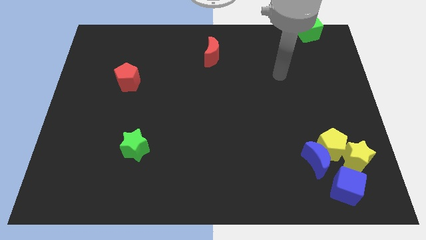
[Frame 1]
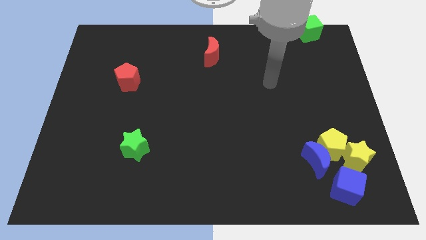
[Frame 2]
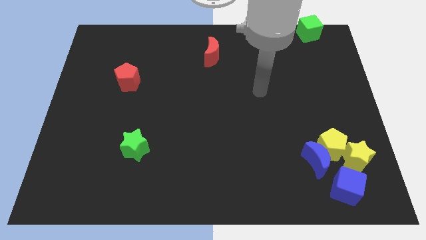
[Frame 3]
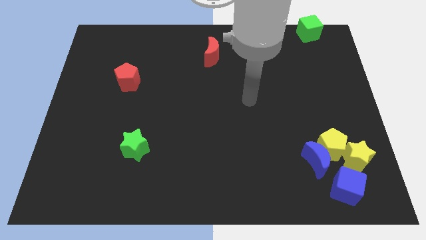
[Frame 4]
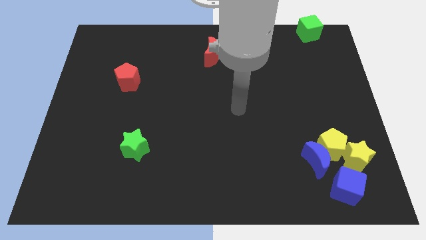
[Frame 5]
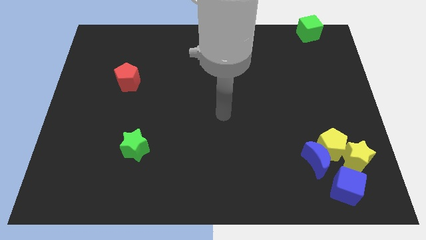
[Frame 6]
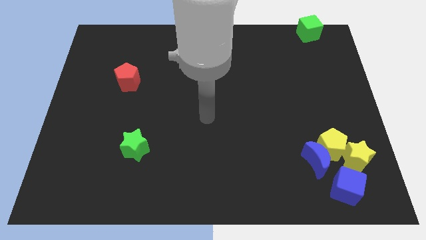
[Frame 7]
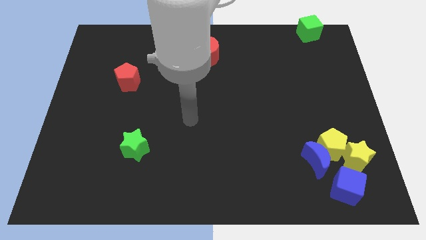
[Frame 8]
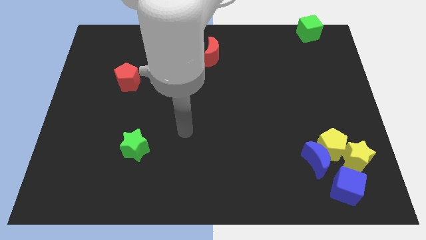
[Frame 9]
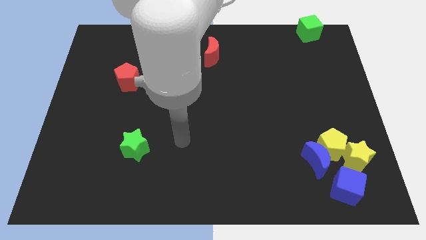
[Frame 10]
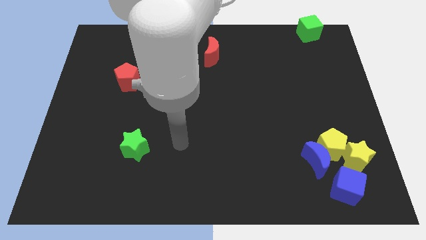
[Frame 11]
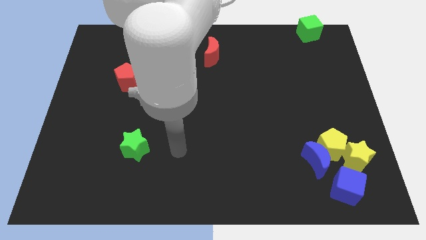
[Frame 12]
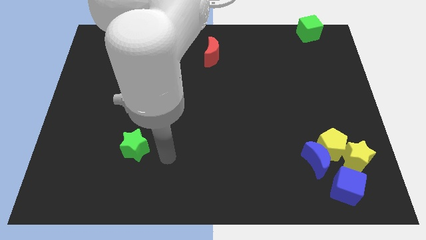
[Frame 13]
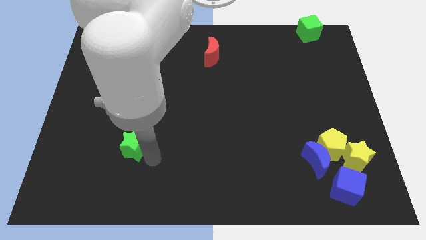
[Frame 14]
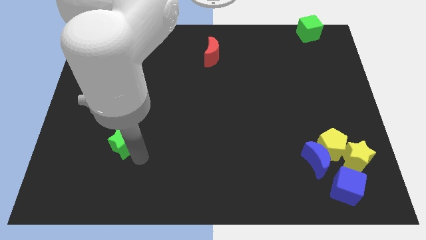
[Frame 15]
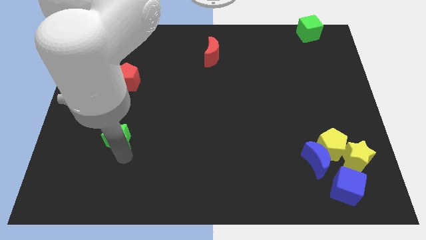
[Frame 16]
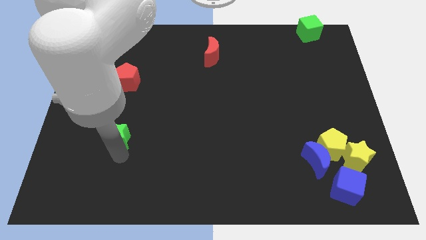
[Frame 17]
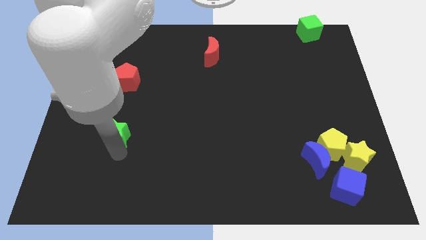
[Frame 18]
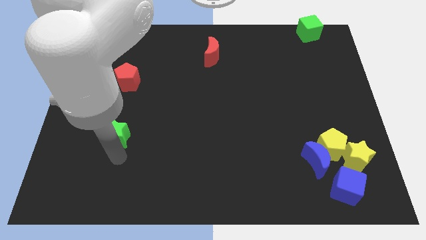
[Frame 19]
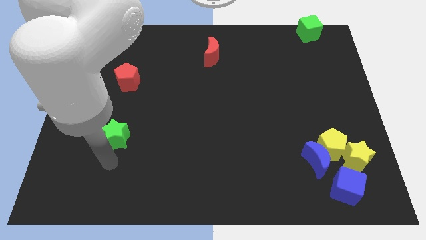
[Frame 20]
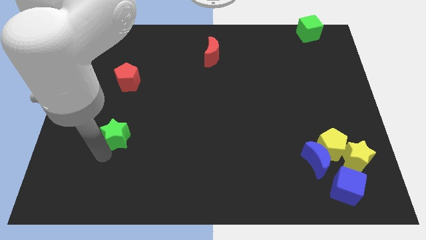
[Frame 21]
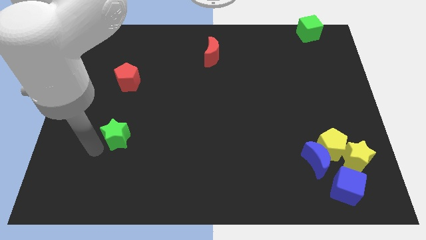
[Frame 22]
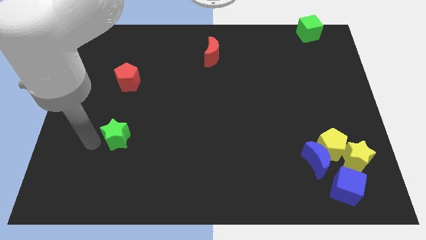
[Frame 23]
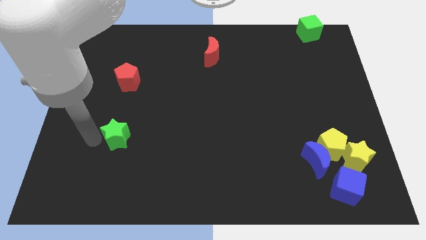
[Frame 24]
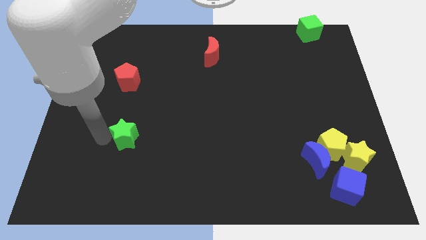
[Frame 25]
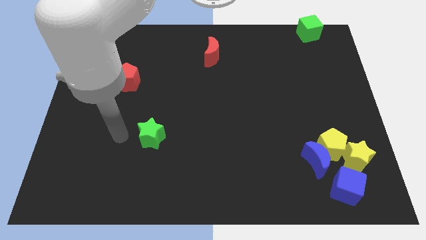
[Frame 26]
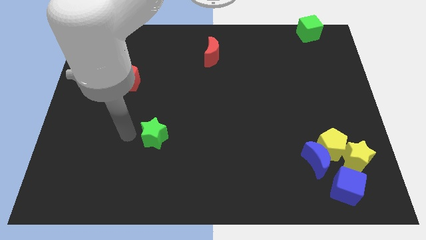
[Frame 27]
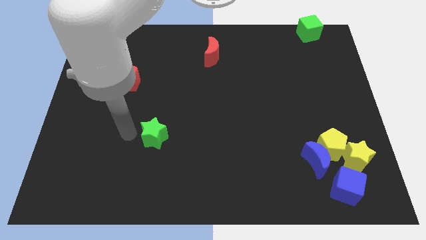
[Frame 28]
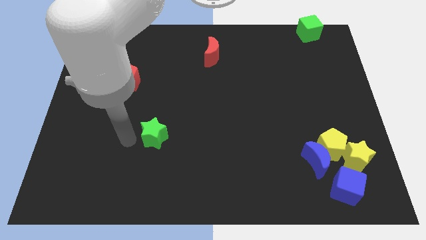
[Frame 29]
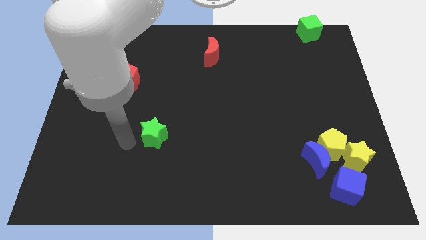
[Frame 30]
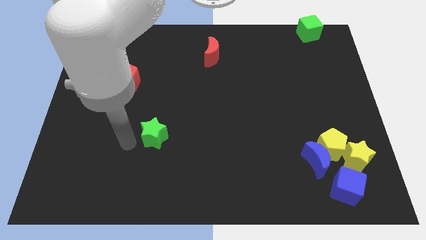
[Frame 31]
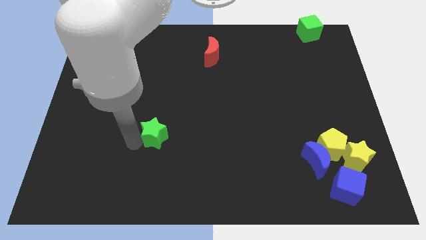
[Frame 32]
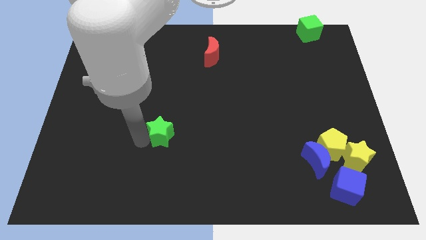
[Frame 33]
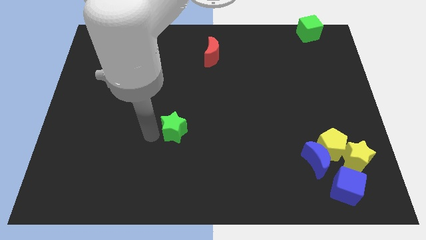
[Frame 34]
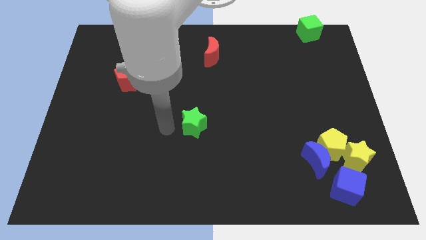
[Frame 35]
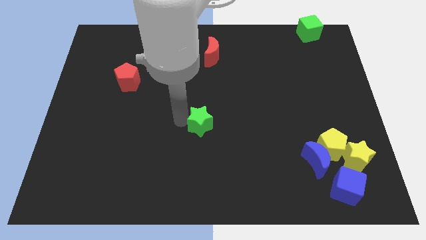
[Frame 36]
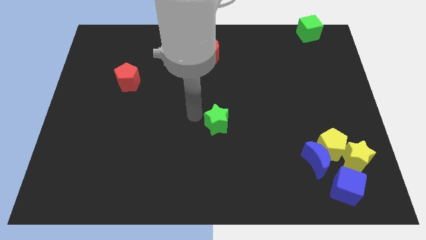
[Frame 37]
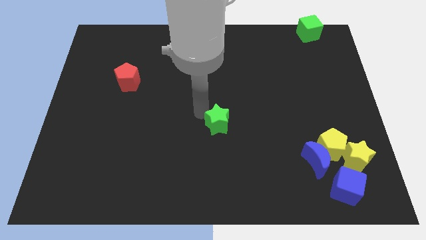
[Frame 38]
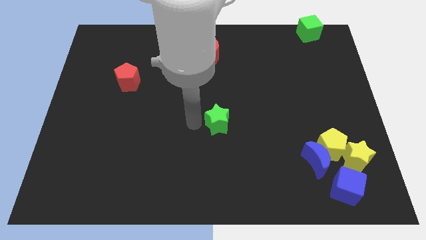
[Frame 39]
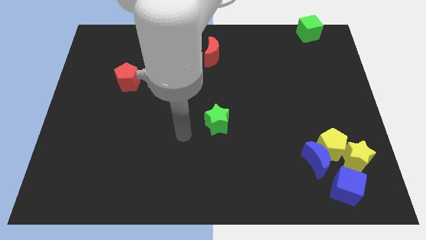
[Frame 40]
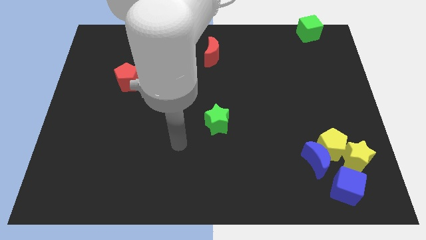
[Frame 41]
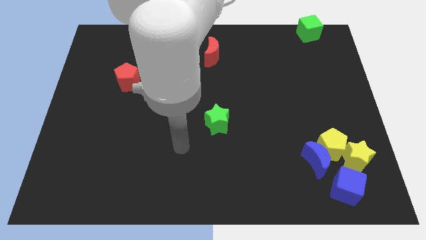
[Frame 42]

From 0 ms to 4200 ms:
place the green star at the center of the board

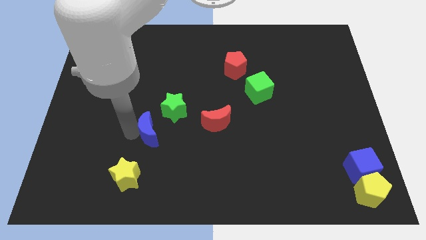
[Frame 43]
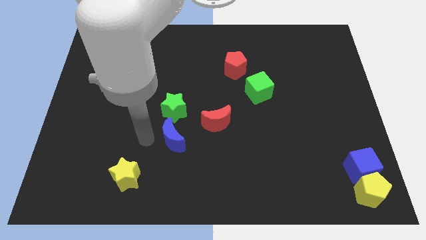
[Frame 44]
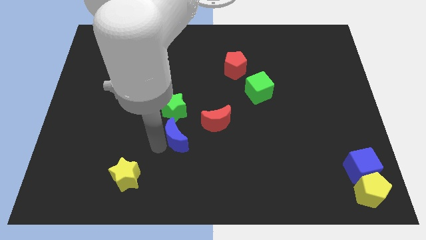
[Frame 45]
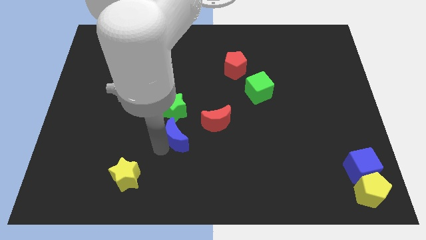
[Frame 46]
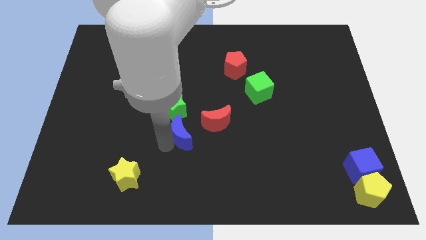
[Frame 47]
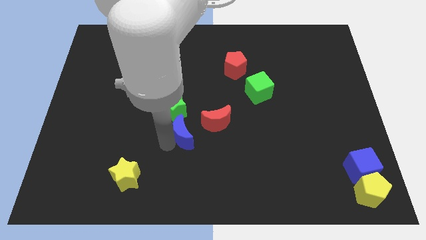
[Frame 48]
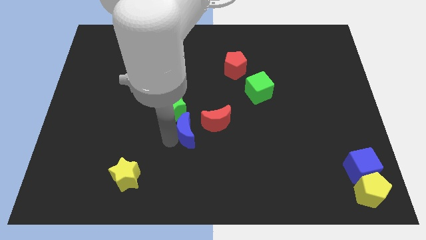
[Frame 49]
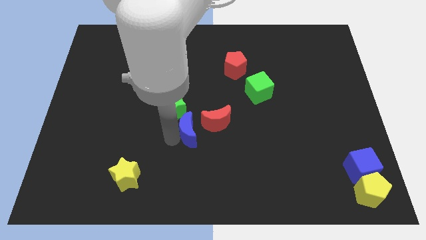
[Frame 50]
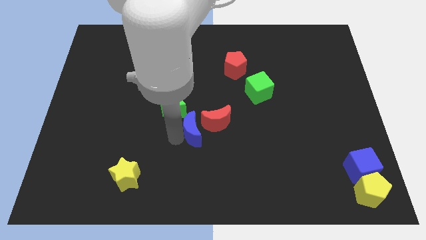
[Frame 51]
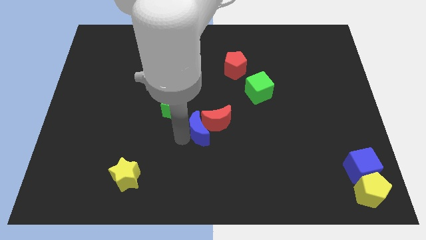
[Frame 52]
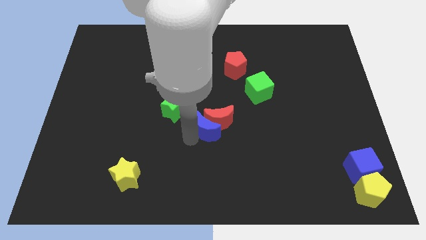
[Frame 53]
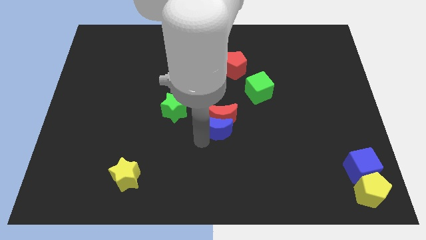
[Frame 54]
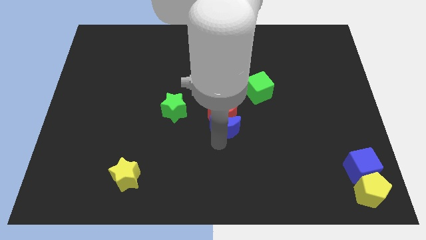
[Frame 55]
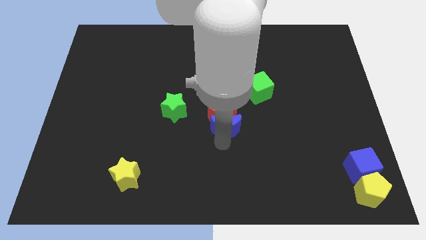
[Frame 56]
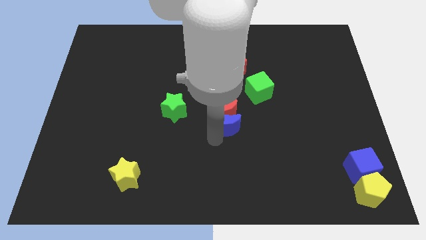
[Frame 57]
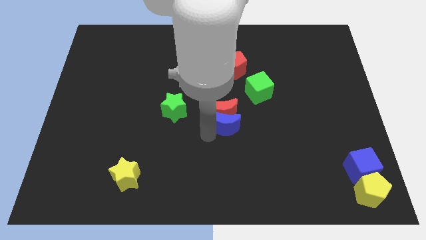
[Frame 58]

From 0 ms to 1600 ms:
move the blue moon into the red moon

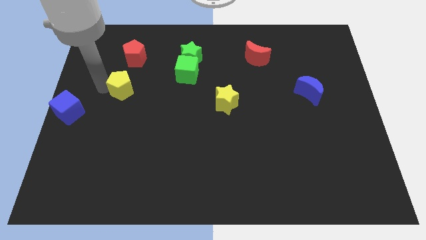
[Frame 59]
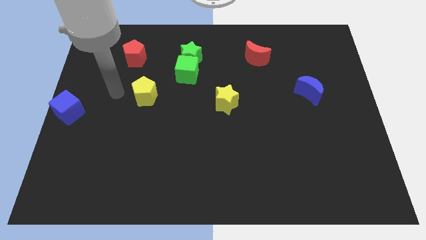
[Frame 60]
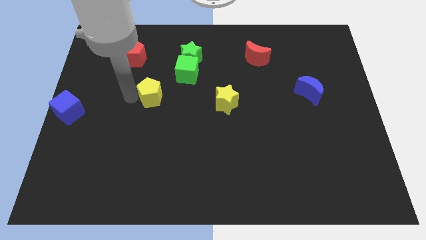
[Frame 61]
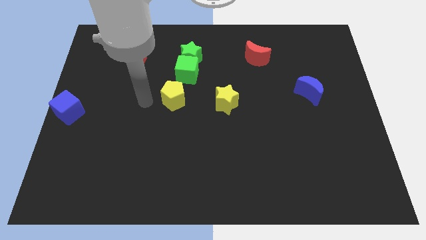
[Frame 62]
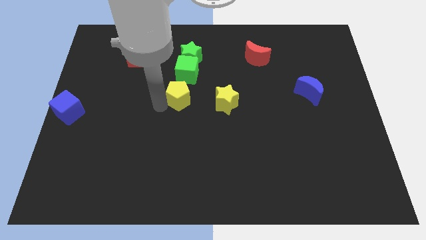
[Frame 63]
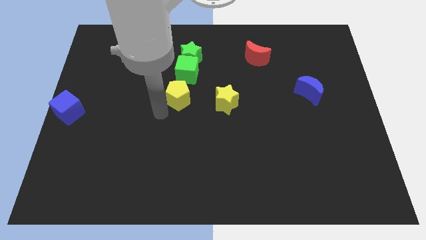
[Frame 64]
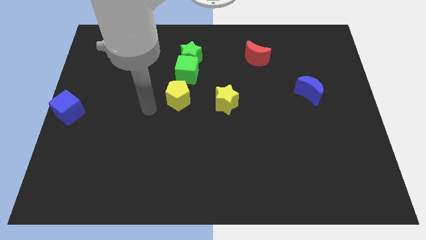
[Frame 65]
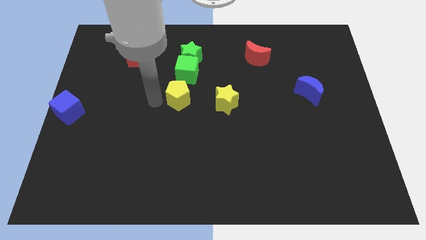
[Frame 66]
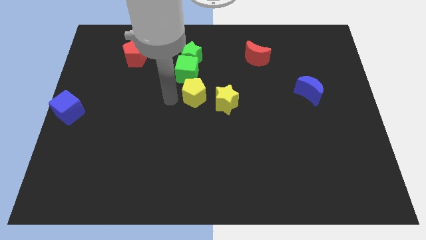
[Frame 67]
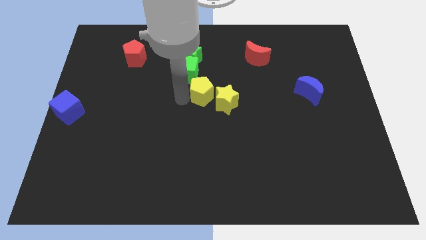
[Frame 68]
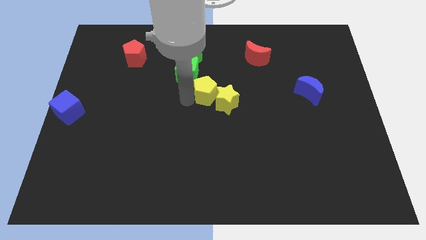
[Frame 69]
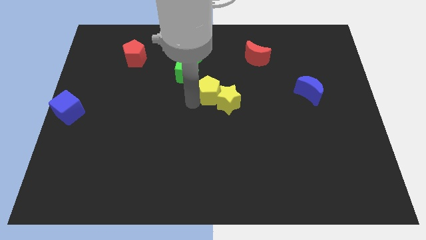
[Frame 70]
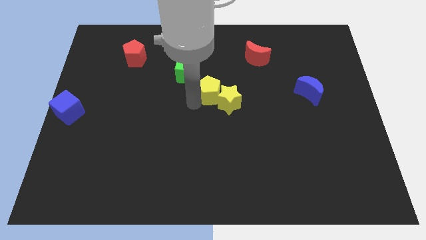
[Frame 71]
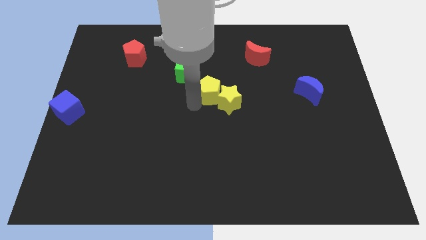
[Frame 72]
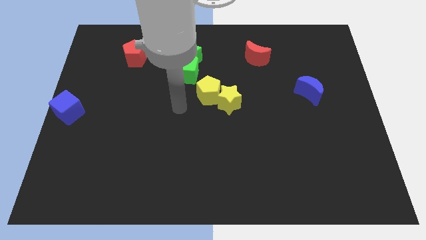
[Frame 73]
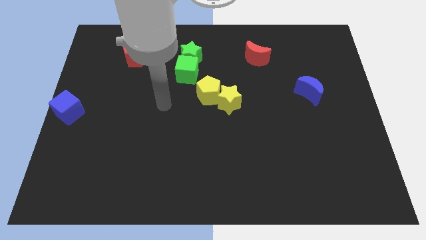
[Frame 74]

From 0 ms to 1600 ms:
push yellow pentagon in to yellow star

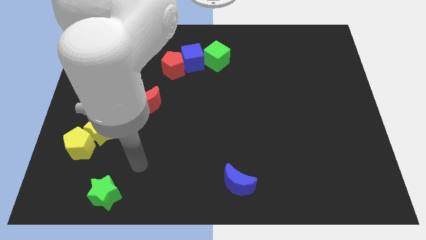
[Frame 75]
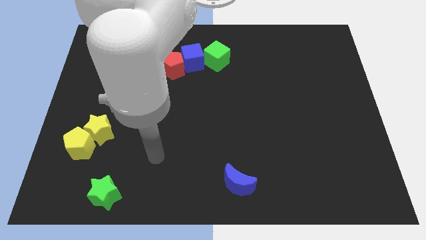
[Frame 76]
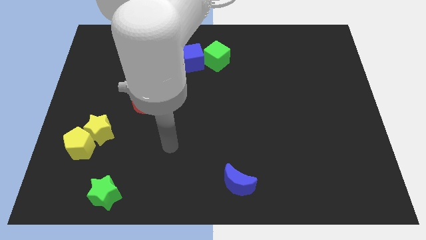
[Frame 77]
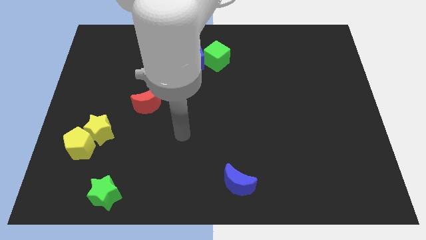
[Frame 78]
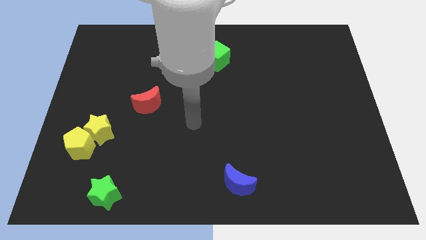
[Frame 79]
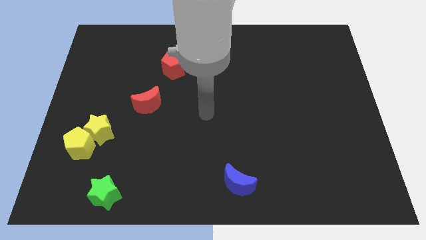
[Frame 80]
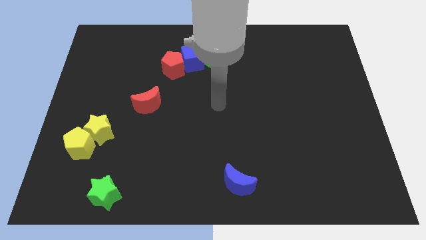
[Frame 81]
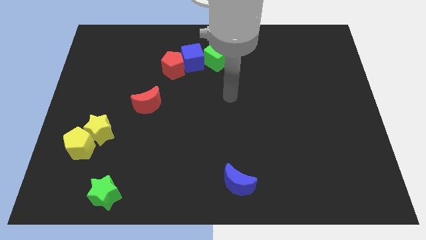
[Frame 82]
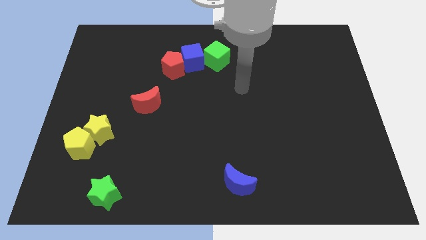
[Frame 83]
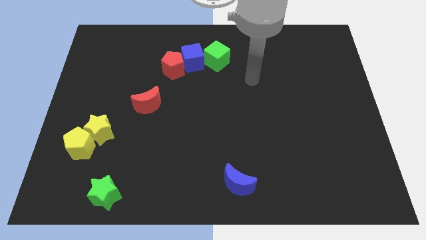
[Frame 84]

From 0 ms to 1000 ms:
move your arm towards the top side of the board

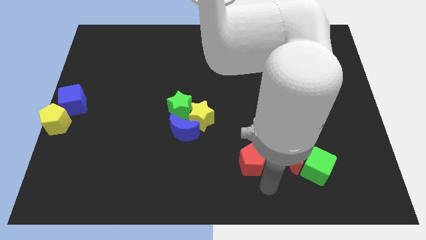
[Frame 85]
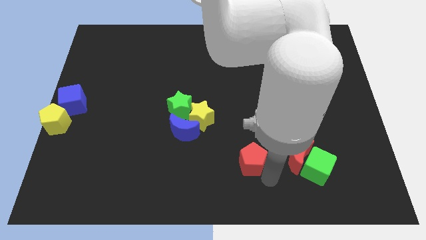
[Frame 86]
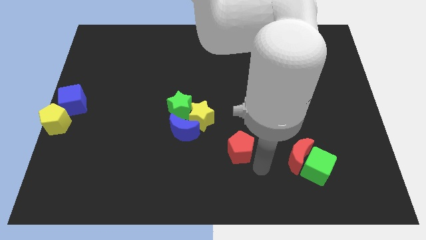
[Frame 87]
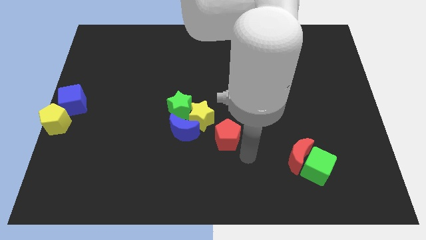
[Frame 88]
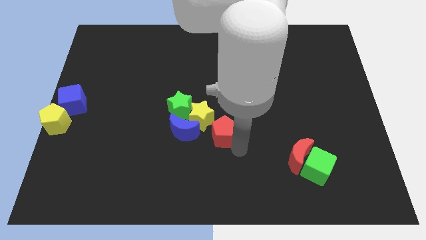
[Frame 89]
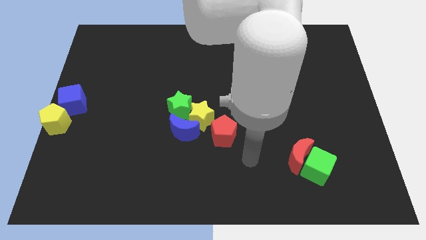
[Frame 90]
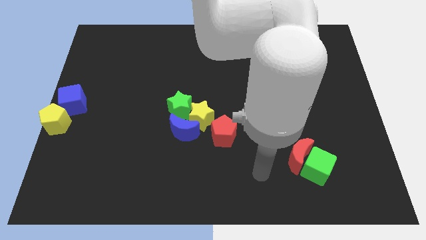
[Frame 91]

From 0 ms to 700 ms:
push the red pentagon diagonal to the yellow star

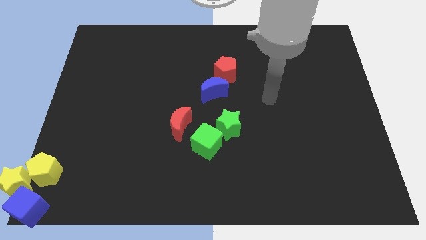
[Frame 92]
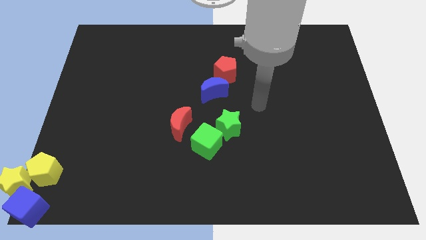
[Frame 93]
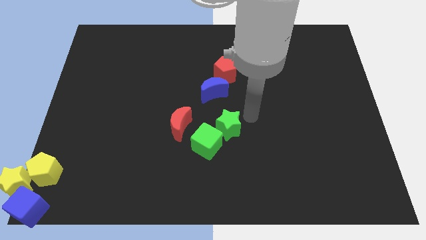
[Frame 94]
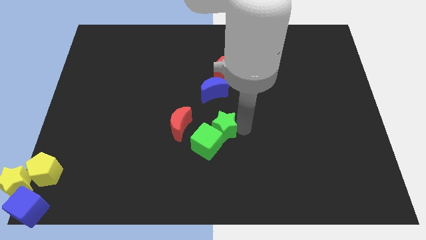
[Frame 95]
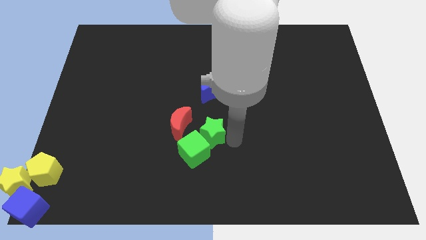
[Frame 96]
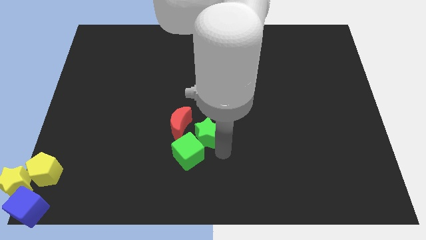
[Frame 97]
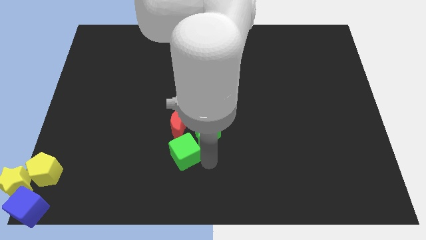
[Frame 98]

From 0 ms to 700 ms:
push green star near to red crescent
